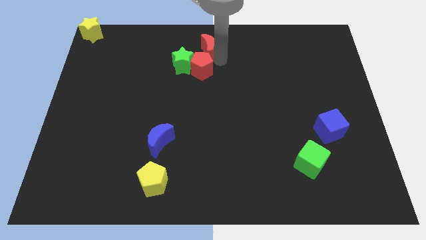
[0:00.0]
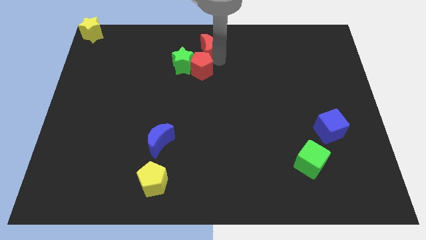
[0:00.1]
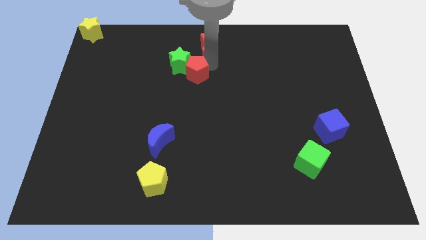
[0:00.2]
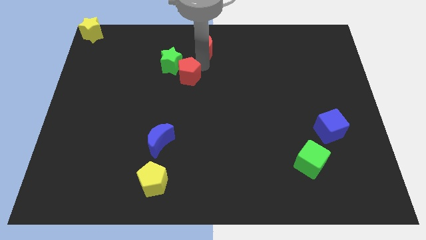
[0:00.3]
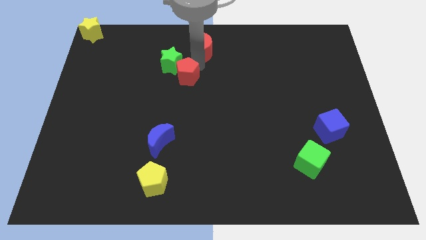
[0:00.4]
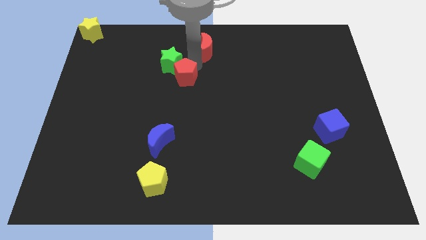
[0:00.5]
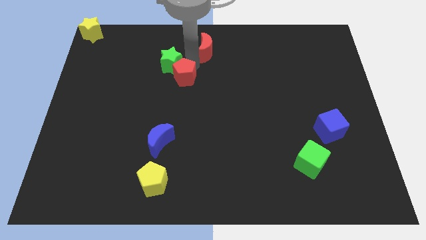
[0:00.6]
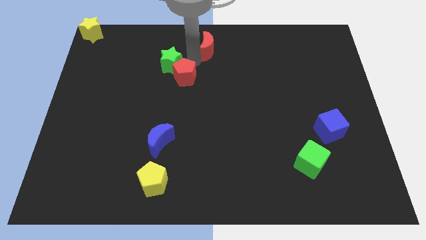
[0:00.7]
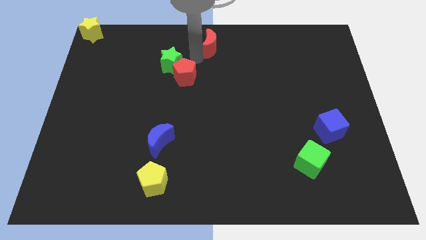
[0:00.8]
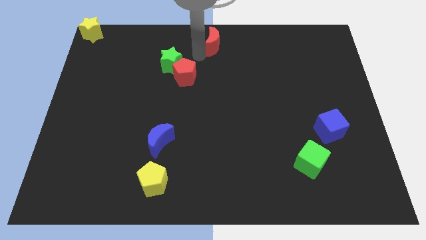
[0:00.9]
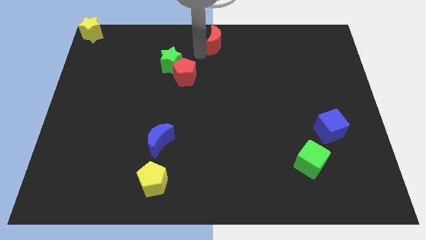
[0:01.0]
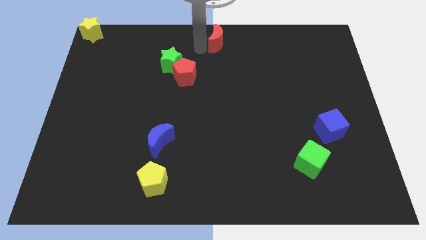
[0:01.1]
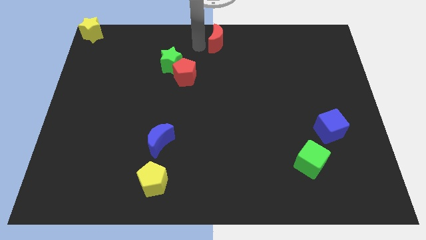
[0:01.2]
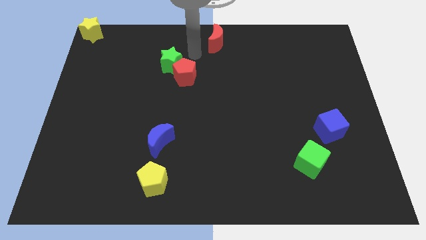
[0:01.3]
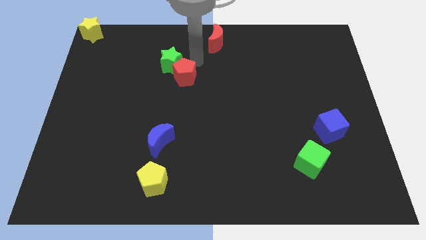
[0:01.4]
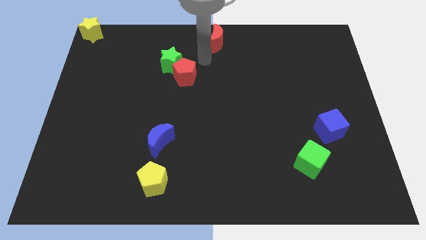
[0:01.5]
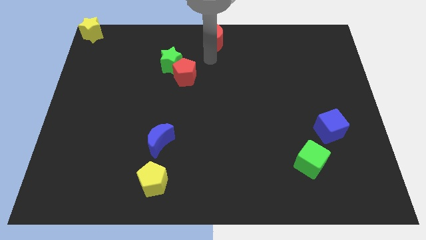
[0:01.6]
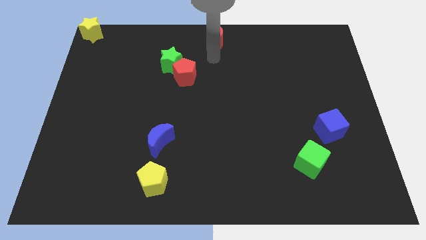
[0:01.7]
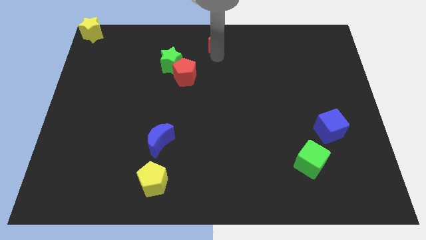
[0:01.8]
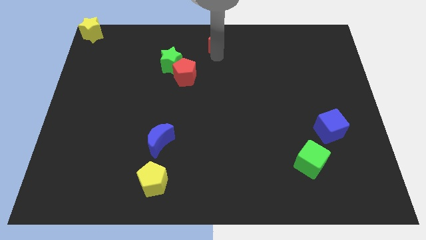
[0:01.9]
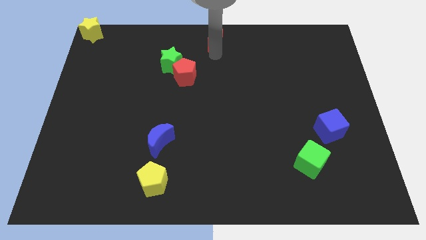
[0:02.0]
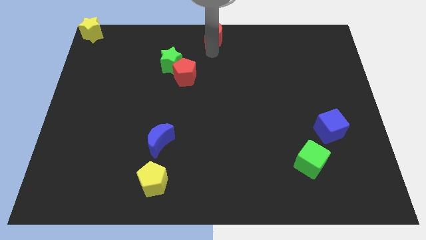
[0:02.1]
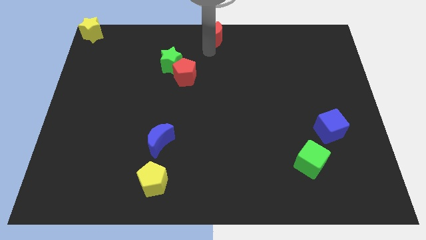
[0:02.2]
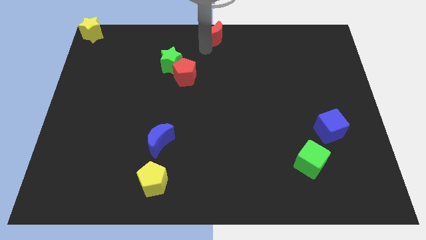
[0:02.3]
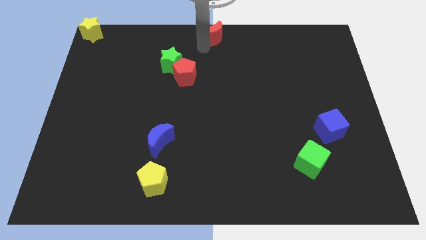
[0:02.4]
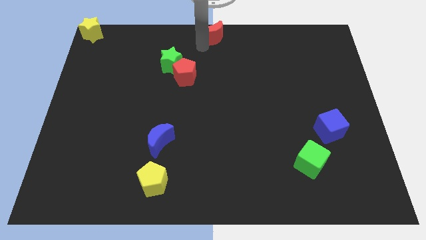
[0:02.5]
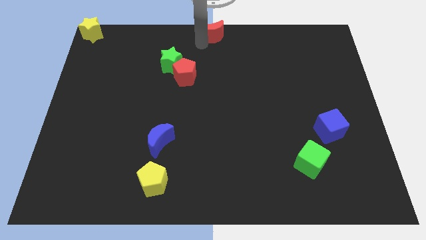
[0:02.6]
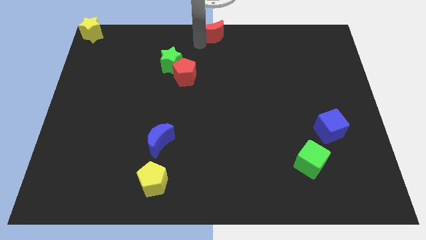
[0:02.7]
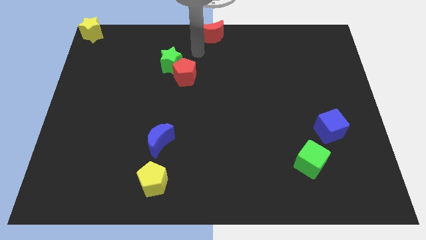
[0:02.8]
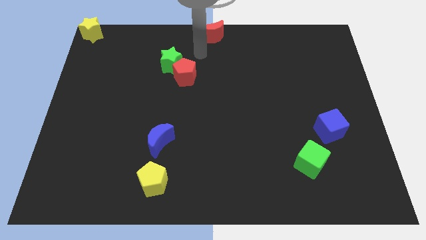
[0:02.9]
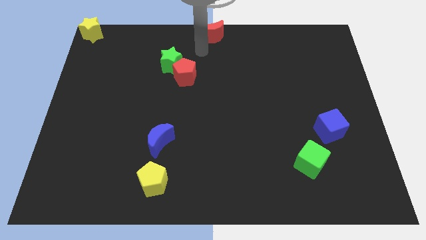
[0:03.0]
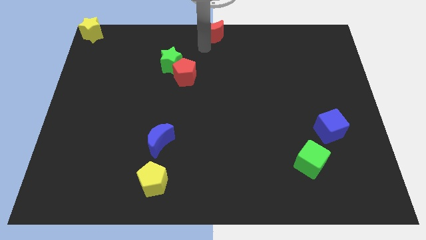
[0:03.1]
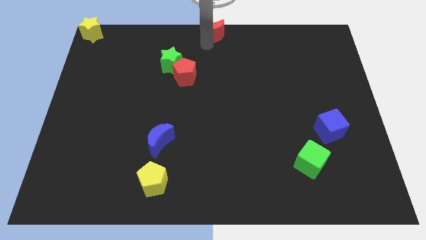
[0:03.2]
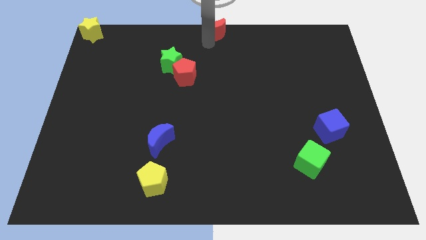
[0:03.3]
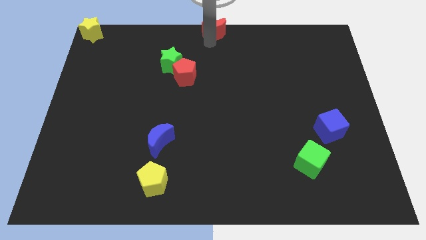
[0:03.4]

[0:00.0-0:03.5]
separate the red moon to the top center side

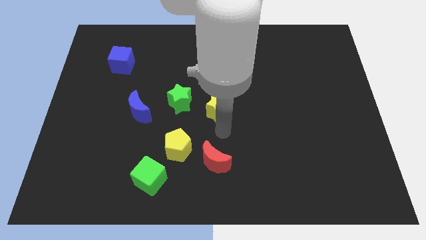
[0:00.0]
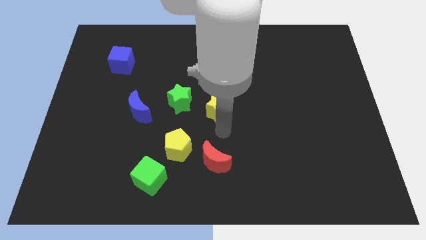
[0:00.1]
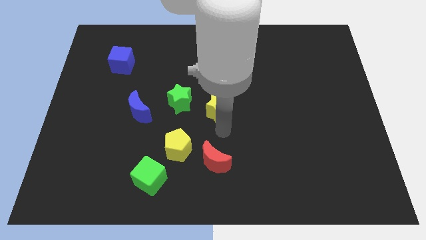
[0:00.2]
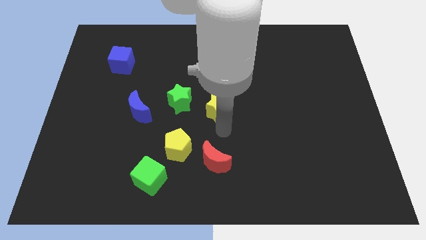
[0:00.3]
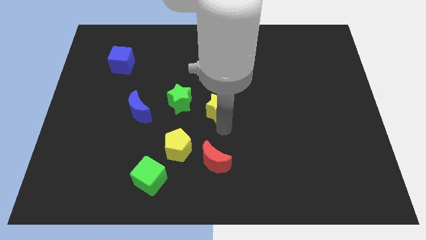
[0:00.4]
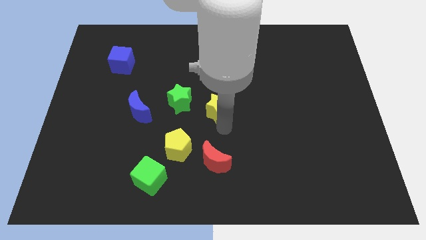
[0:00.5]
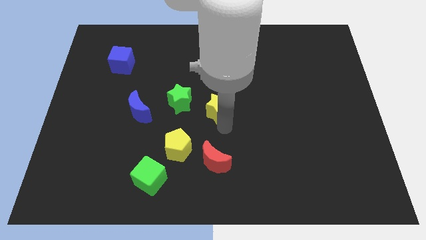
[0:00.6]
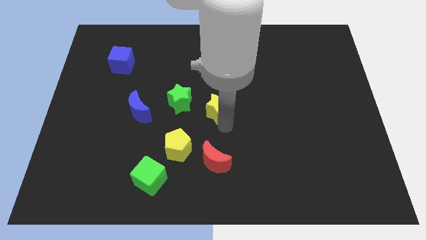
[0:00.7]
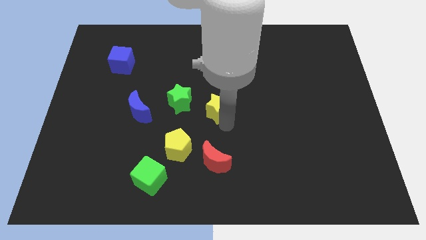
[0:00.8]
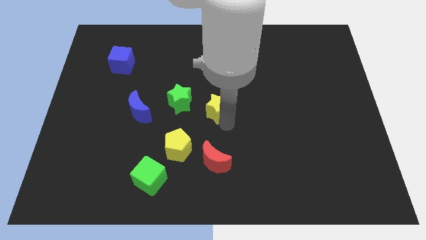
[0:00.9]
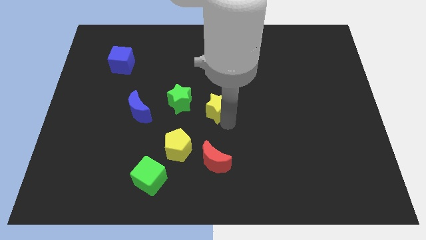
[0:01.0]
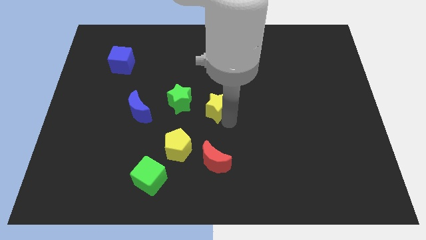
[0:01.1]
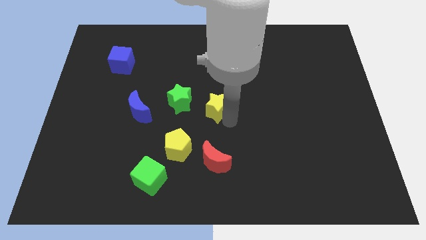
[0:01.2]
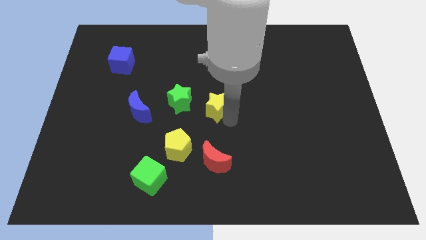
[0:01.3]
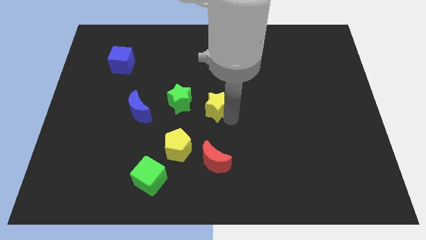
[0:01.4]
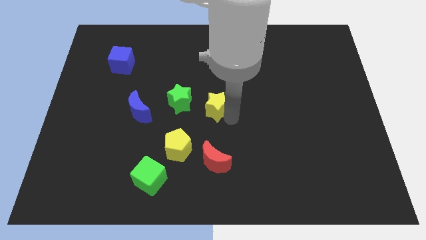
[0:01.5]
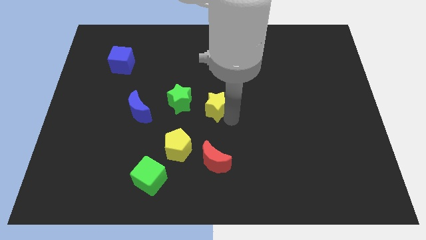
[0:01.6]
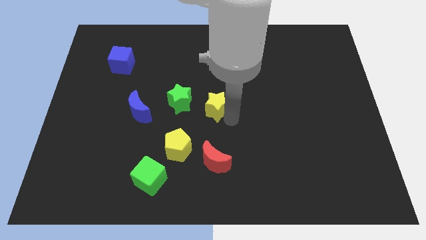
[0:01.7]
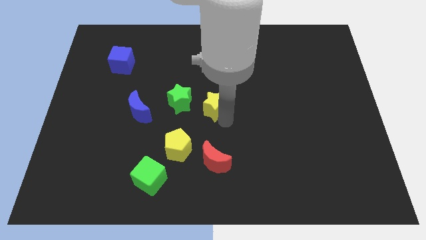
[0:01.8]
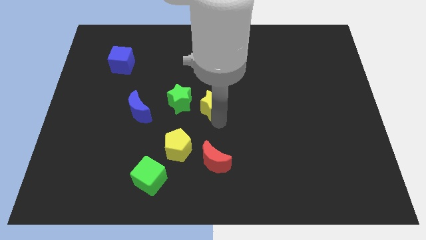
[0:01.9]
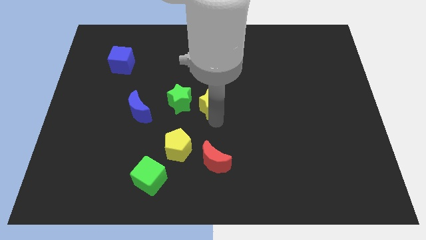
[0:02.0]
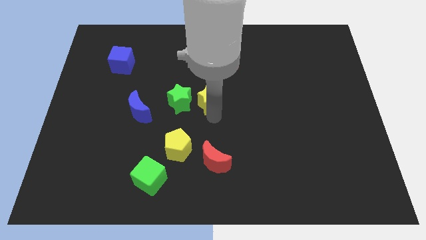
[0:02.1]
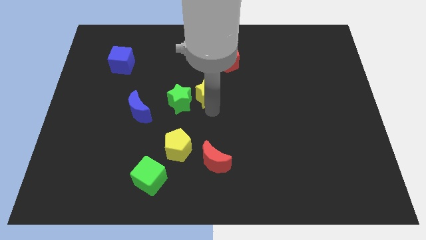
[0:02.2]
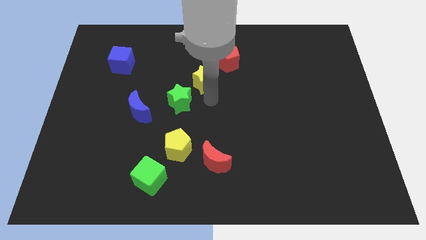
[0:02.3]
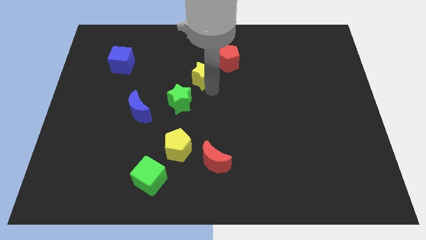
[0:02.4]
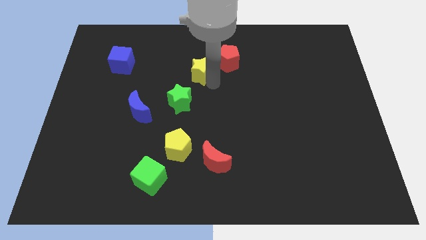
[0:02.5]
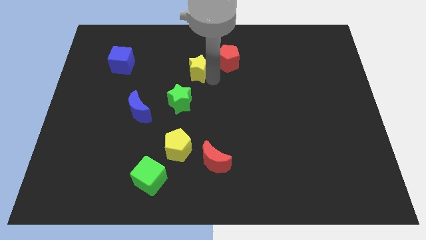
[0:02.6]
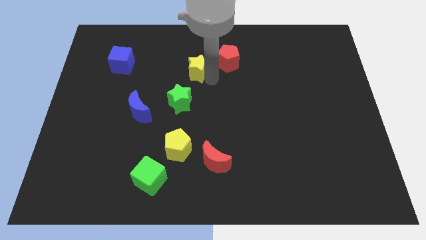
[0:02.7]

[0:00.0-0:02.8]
push the yellow star to the left of the red pentagon

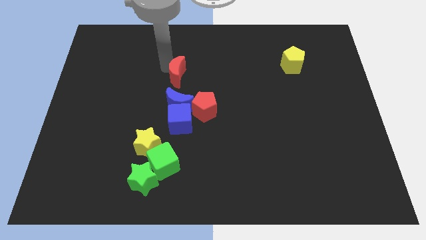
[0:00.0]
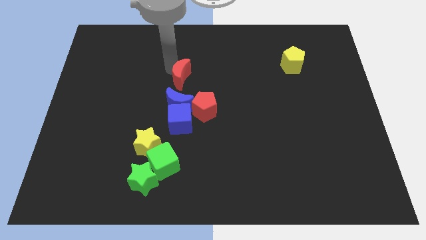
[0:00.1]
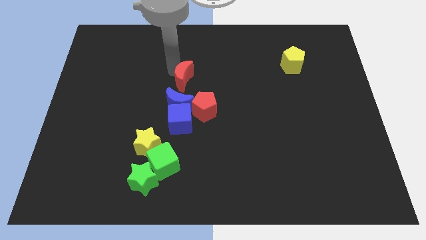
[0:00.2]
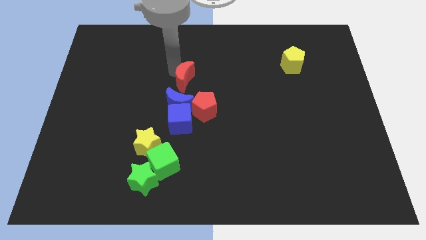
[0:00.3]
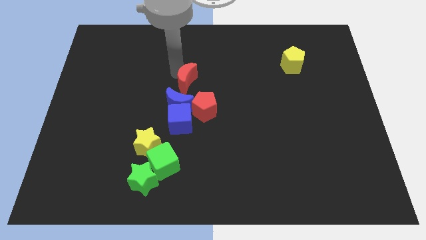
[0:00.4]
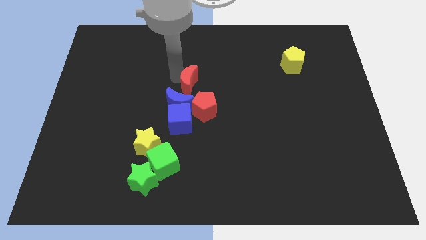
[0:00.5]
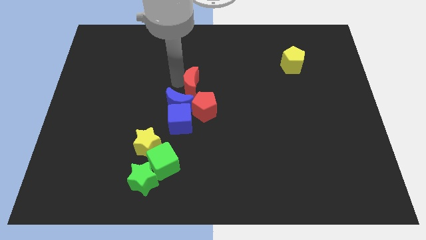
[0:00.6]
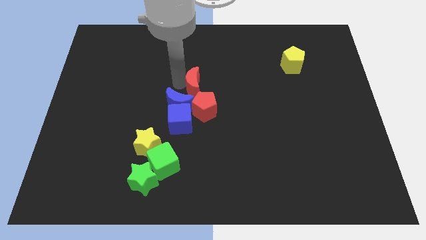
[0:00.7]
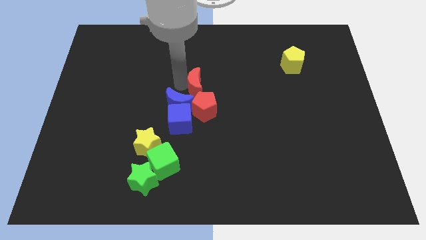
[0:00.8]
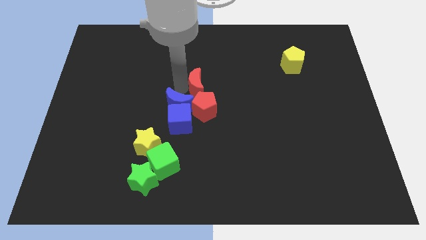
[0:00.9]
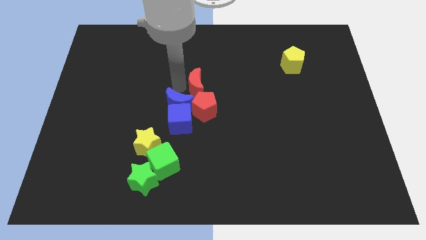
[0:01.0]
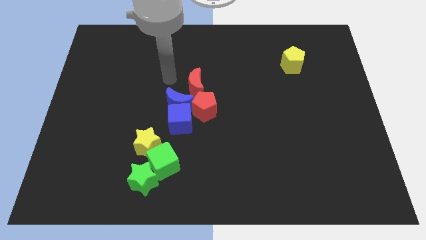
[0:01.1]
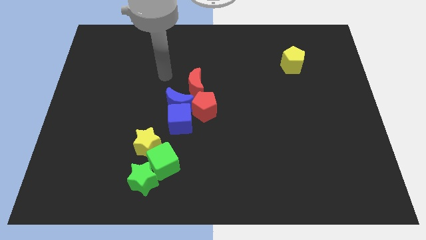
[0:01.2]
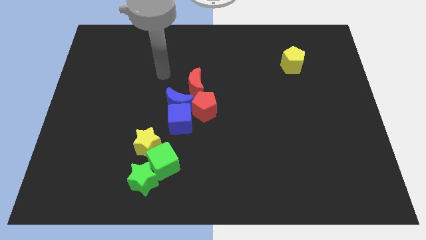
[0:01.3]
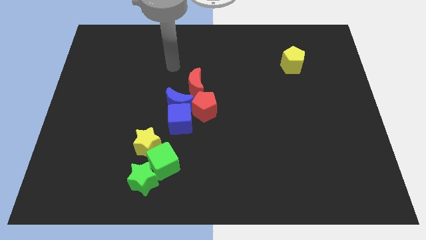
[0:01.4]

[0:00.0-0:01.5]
move the red crescent above to the red pentagon

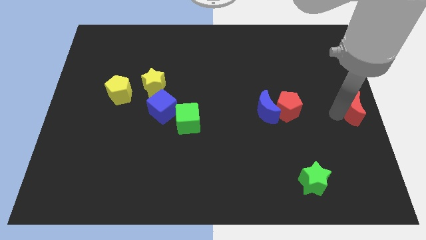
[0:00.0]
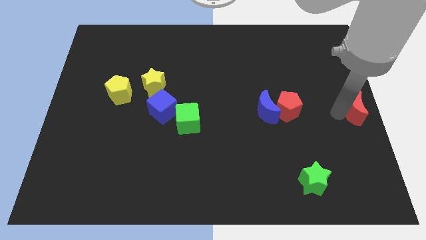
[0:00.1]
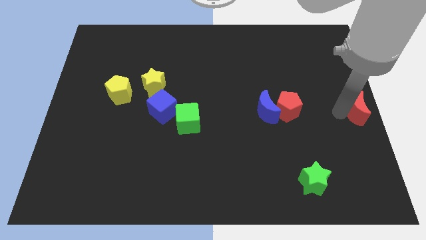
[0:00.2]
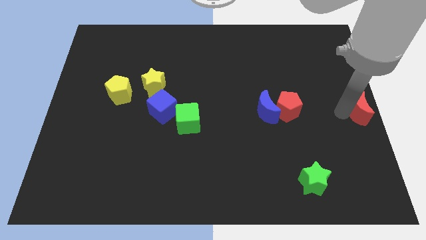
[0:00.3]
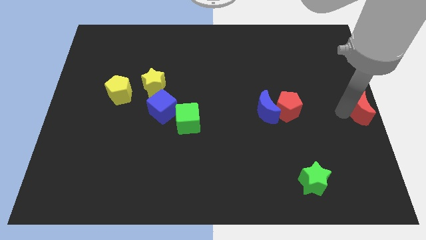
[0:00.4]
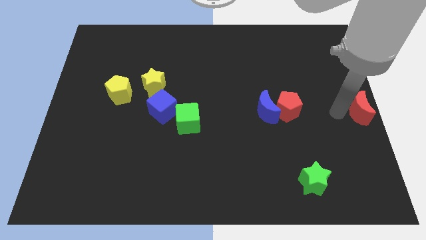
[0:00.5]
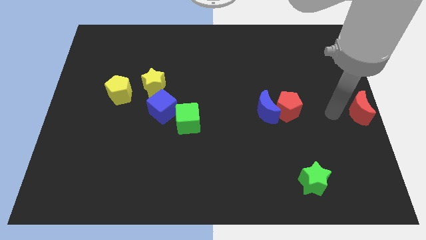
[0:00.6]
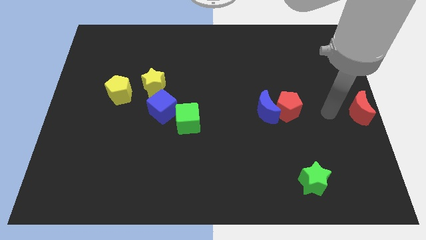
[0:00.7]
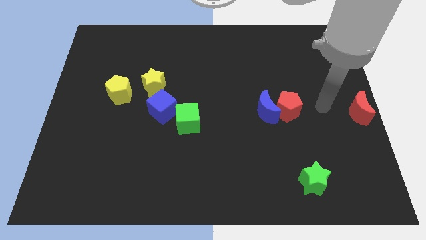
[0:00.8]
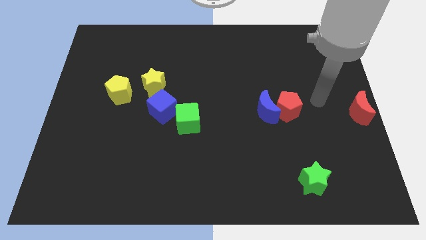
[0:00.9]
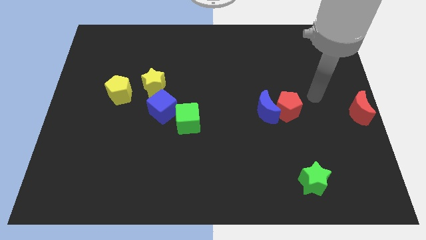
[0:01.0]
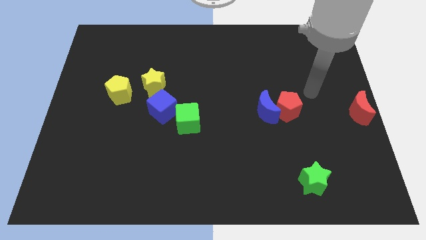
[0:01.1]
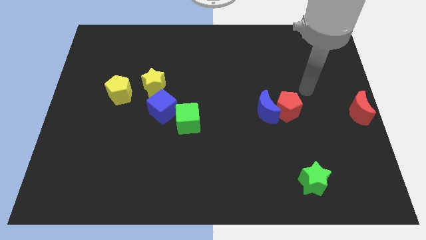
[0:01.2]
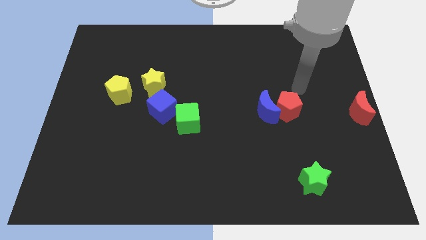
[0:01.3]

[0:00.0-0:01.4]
move your arm away from red moon
